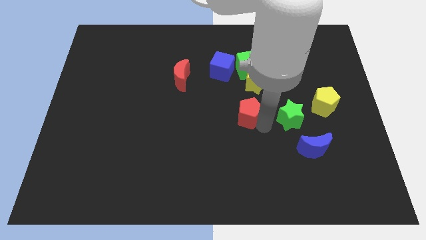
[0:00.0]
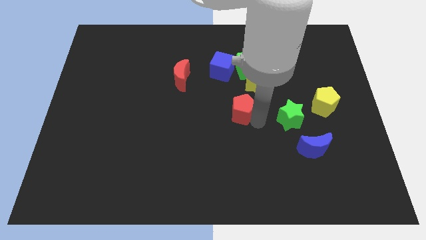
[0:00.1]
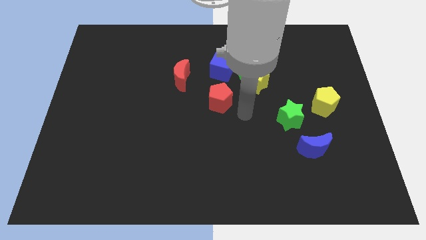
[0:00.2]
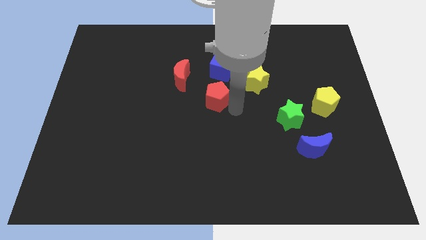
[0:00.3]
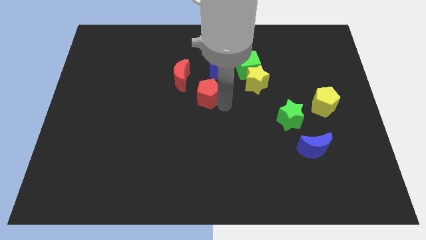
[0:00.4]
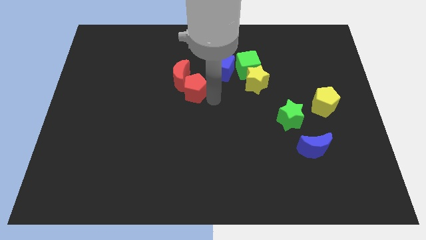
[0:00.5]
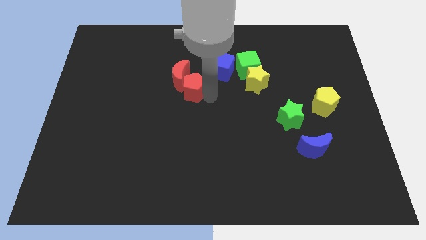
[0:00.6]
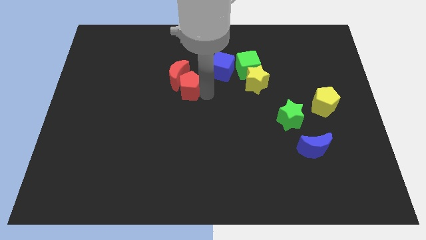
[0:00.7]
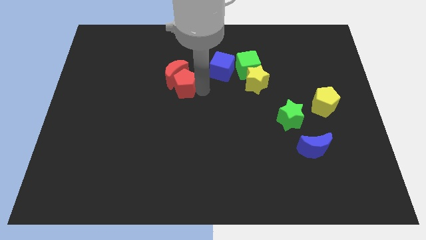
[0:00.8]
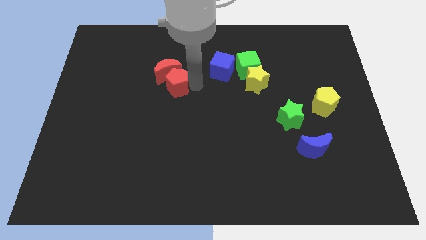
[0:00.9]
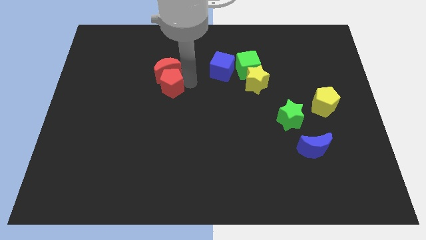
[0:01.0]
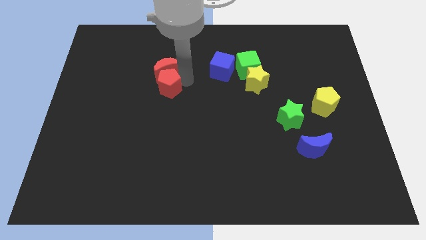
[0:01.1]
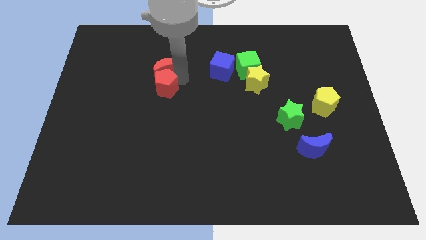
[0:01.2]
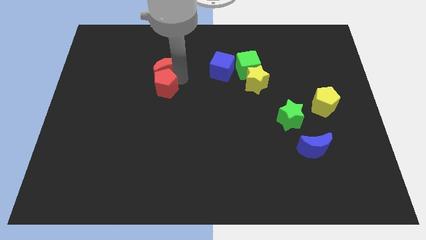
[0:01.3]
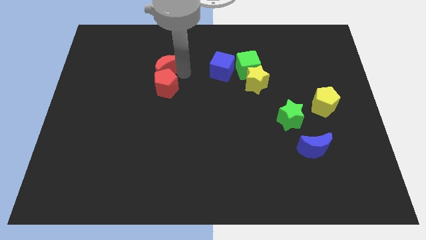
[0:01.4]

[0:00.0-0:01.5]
move the red pentagon towards the red crescent

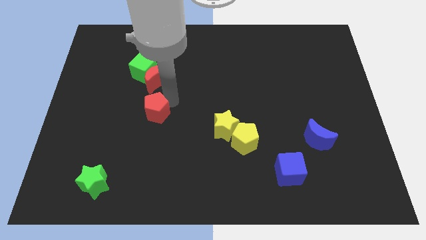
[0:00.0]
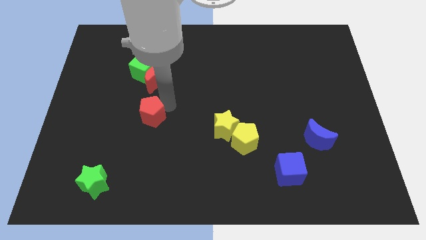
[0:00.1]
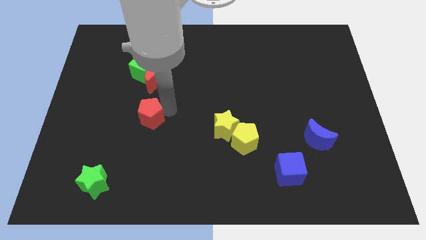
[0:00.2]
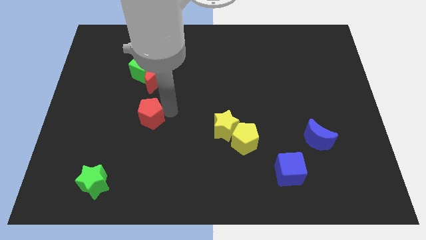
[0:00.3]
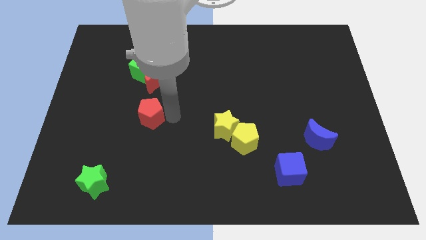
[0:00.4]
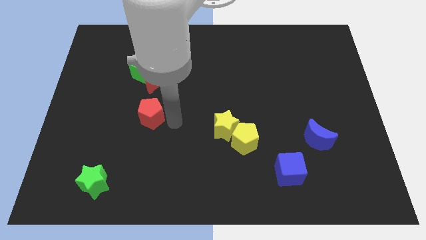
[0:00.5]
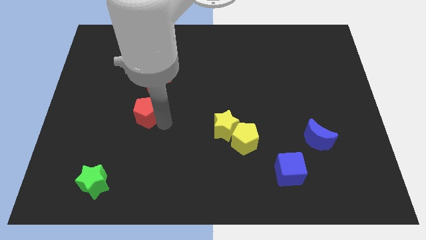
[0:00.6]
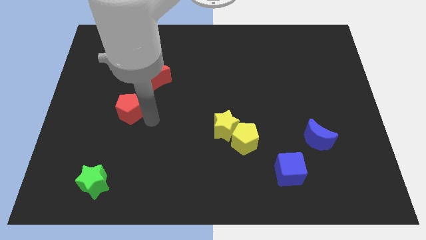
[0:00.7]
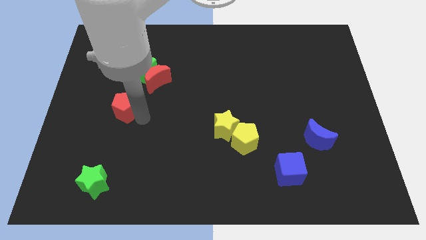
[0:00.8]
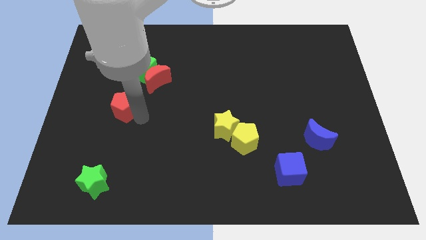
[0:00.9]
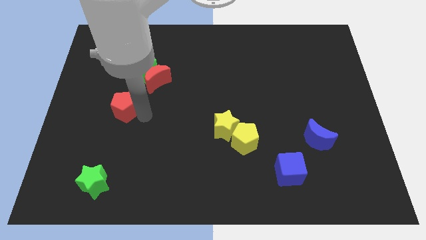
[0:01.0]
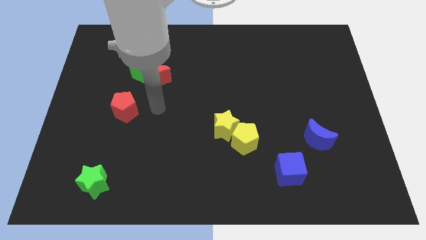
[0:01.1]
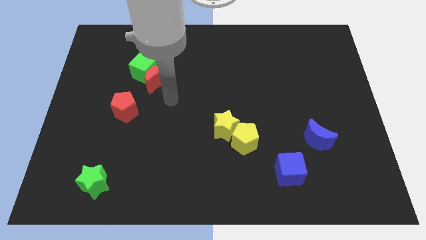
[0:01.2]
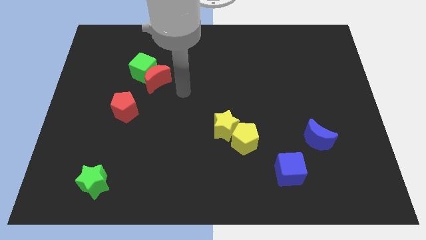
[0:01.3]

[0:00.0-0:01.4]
move the red pentagon at the bottom left side of the red moon

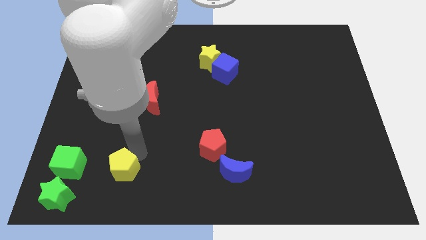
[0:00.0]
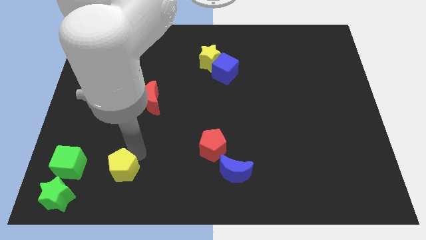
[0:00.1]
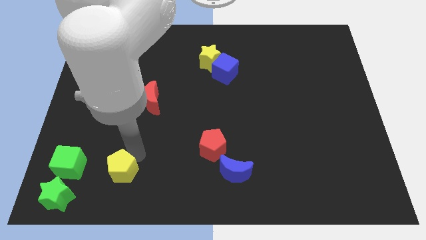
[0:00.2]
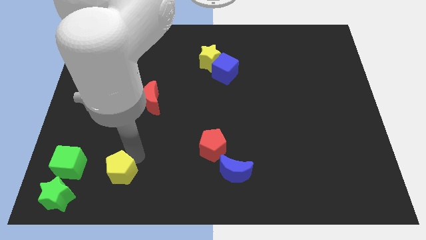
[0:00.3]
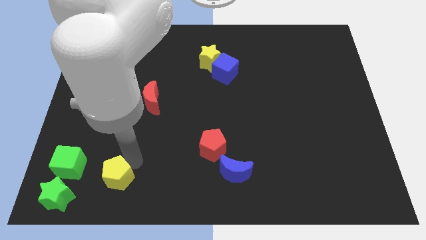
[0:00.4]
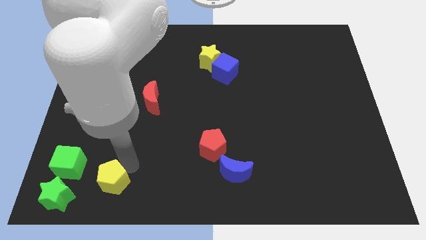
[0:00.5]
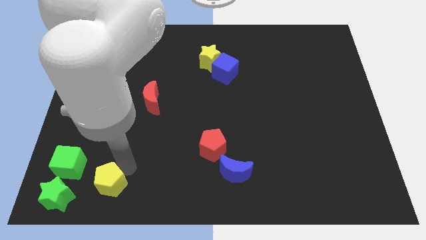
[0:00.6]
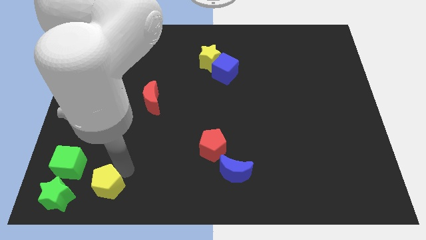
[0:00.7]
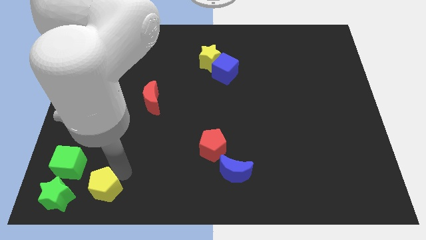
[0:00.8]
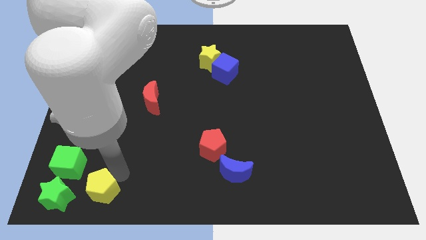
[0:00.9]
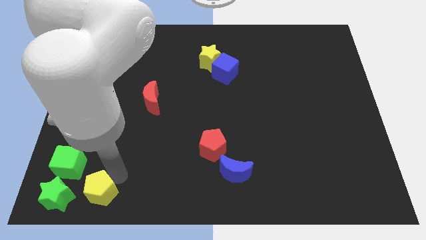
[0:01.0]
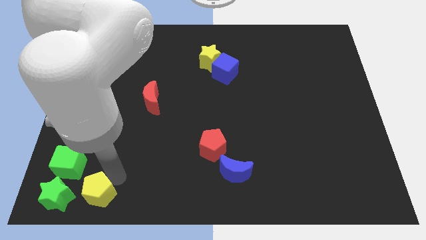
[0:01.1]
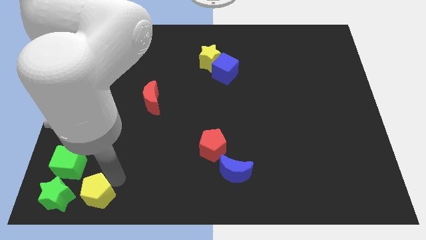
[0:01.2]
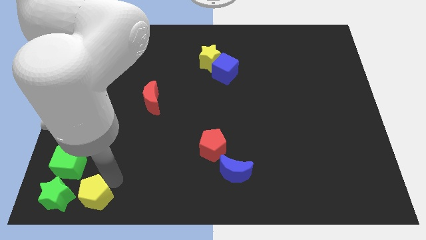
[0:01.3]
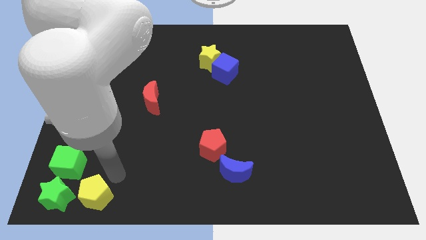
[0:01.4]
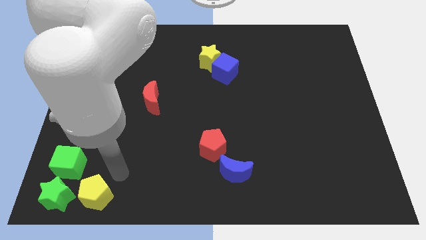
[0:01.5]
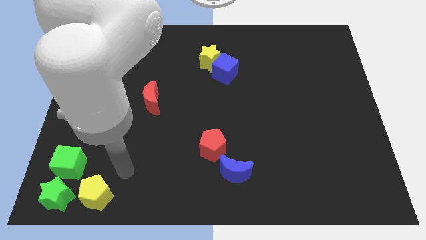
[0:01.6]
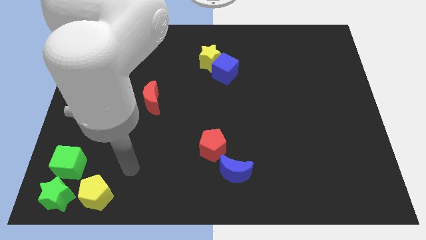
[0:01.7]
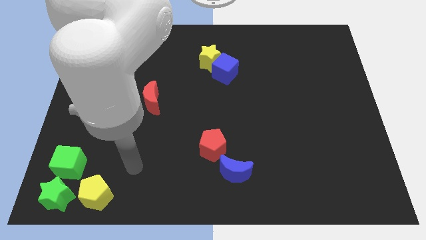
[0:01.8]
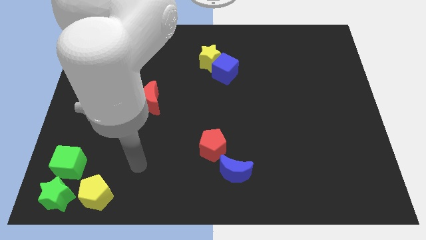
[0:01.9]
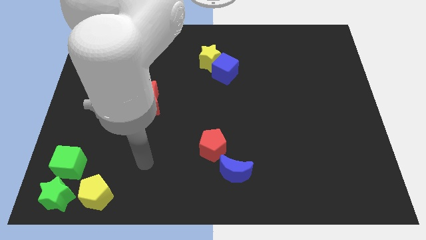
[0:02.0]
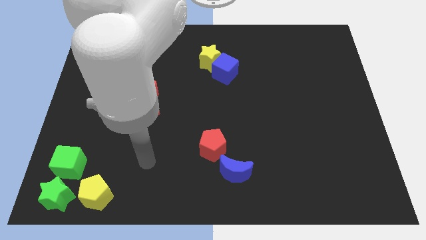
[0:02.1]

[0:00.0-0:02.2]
place the yellow pentagon to the right side of the green star

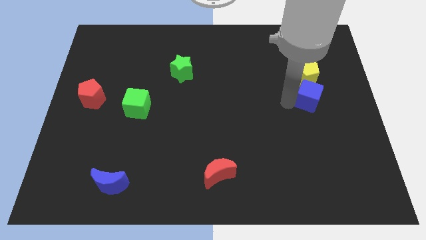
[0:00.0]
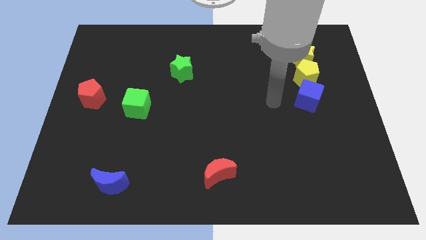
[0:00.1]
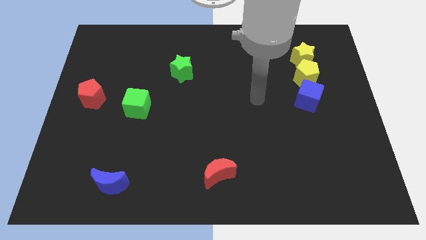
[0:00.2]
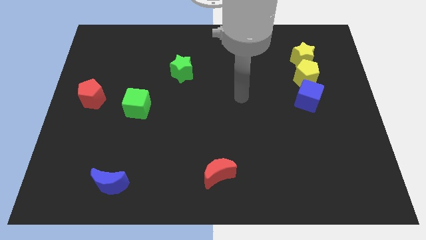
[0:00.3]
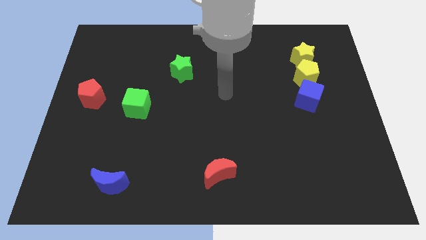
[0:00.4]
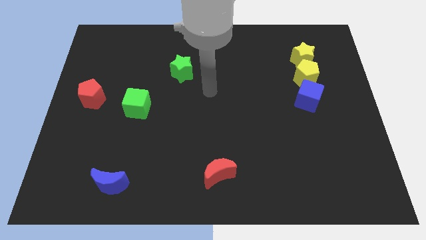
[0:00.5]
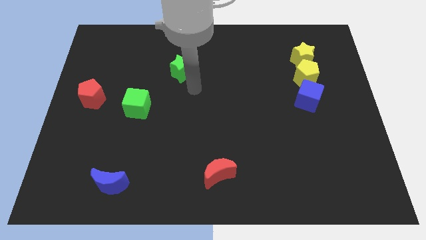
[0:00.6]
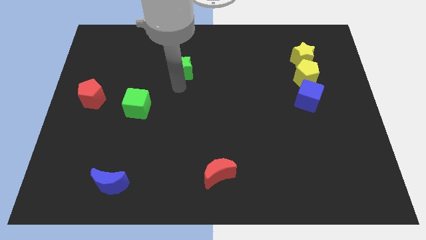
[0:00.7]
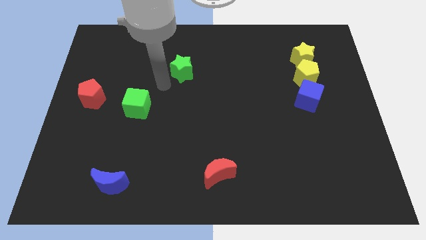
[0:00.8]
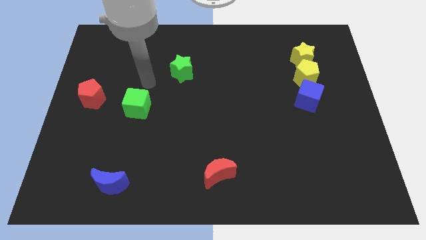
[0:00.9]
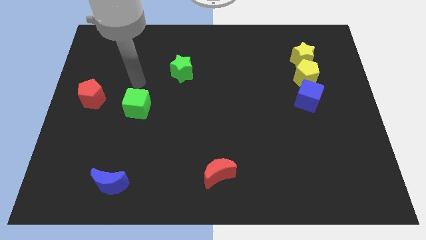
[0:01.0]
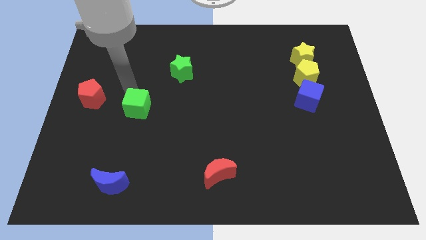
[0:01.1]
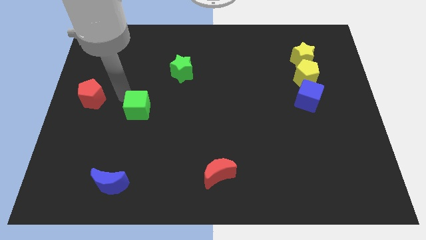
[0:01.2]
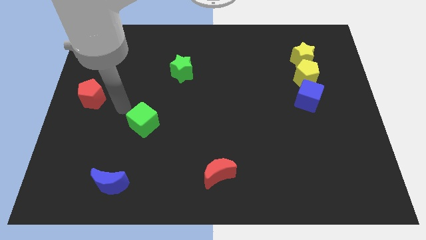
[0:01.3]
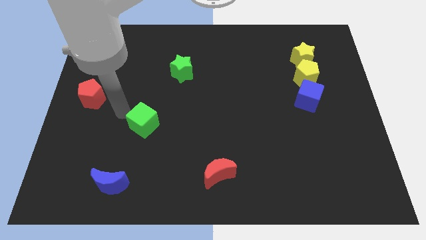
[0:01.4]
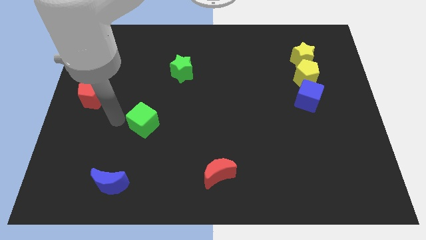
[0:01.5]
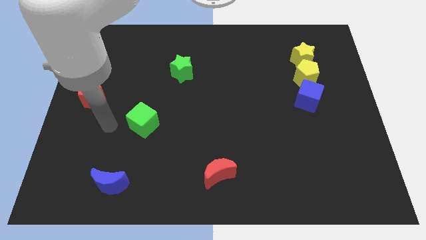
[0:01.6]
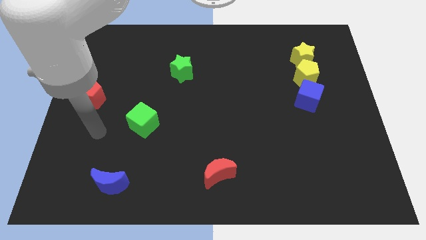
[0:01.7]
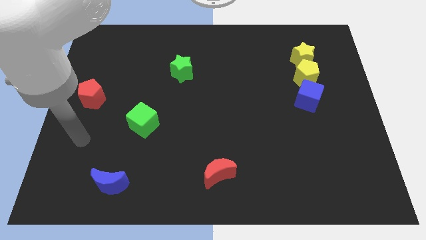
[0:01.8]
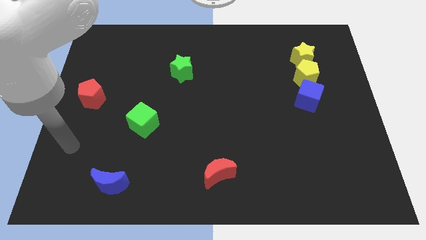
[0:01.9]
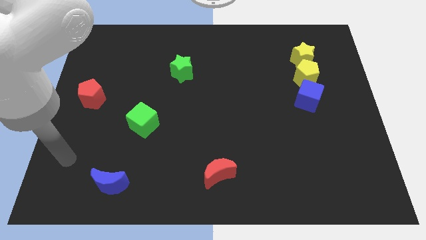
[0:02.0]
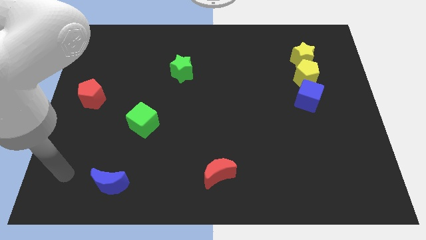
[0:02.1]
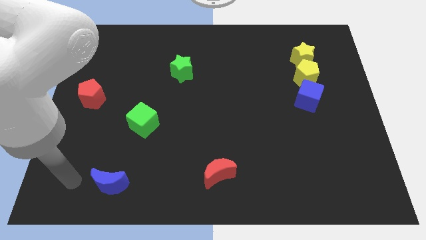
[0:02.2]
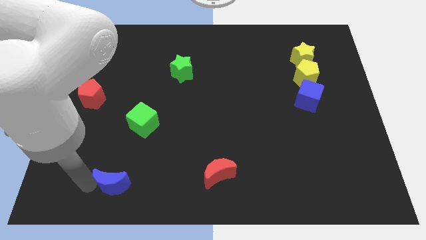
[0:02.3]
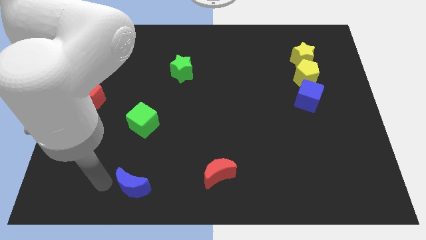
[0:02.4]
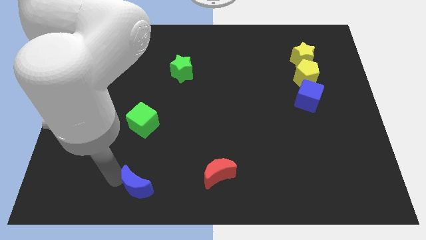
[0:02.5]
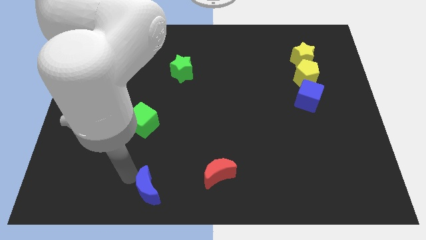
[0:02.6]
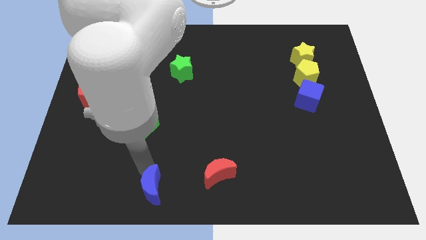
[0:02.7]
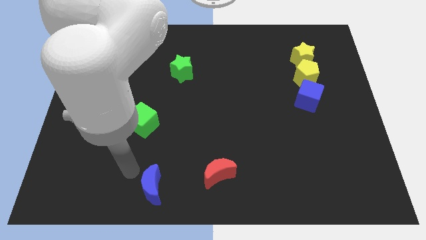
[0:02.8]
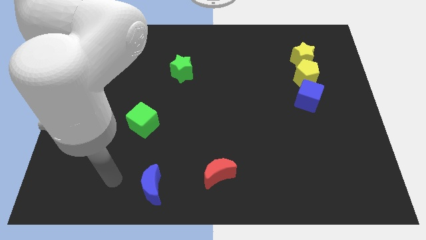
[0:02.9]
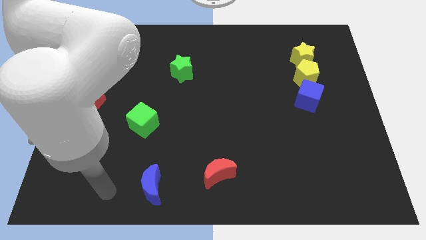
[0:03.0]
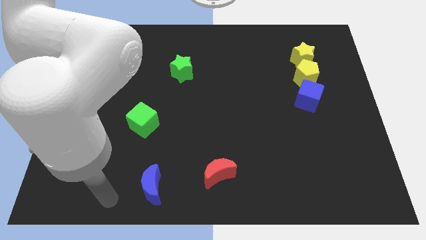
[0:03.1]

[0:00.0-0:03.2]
move your arm away from the blue cube

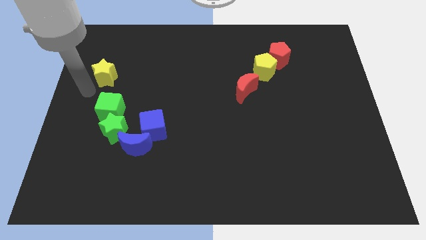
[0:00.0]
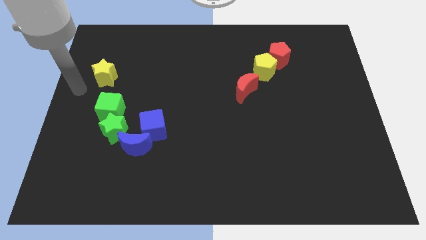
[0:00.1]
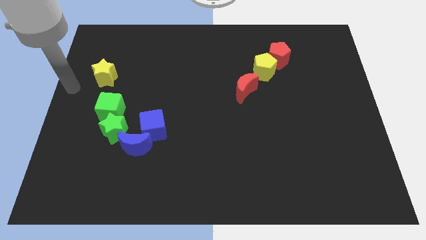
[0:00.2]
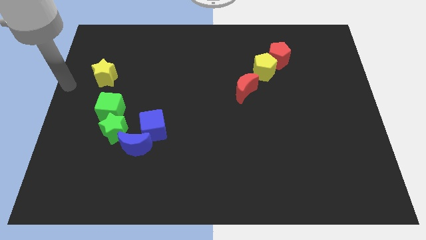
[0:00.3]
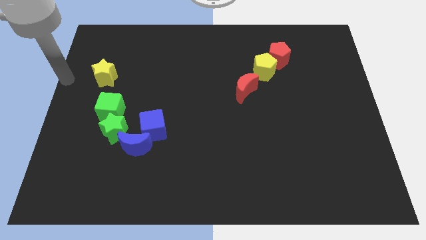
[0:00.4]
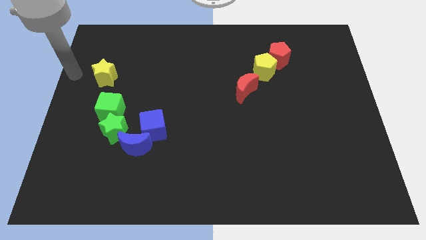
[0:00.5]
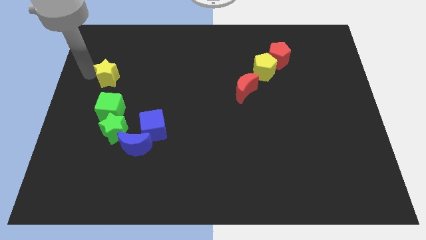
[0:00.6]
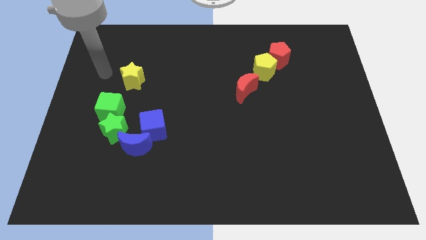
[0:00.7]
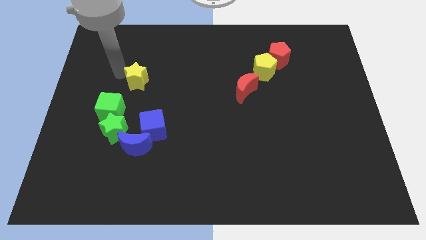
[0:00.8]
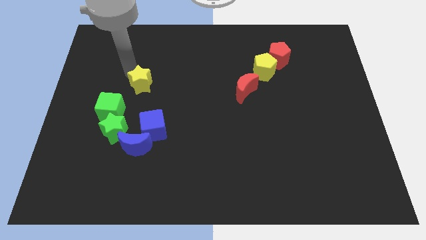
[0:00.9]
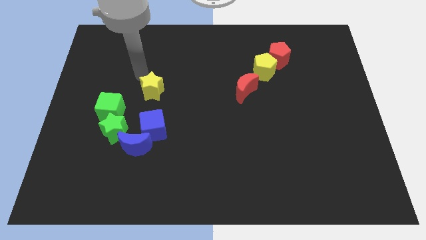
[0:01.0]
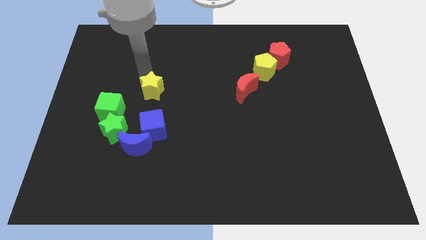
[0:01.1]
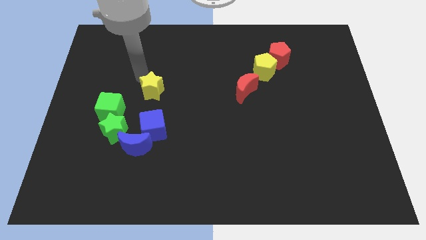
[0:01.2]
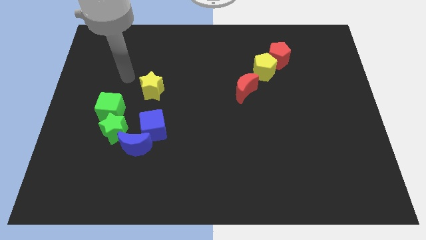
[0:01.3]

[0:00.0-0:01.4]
put the yellow star and the blue cube in a line vertically
